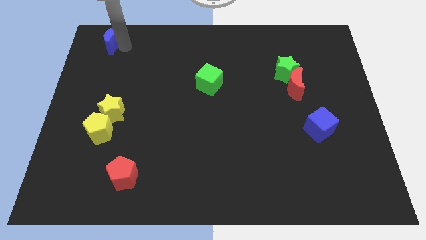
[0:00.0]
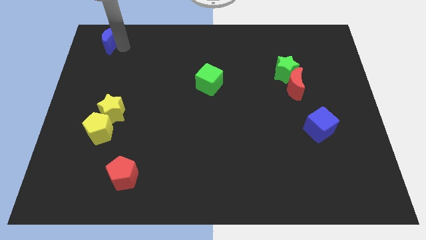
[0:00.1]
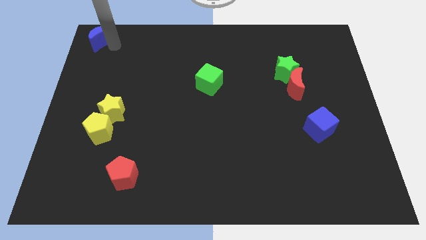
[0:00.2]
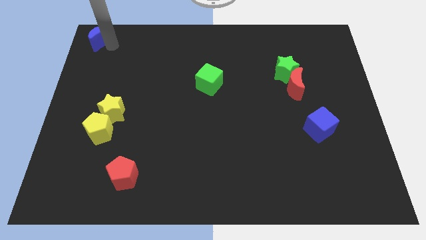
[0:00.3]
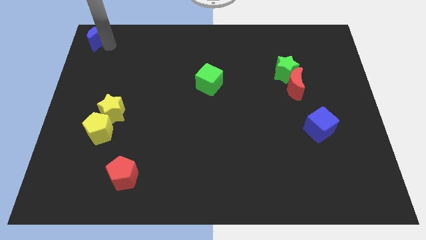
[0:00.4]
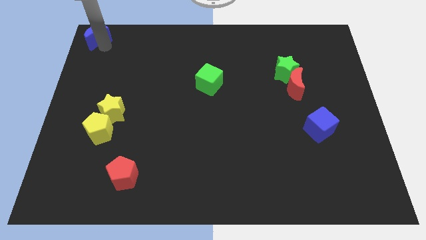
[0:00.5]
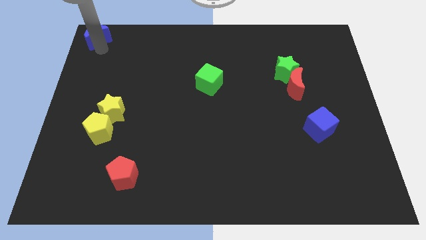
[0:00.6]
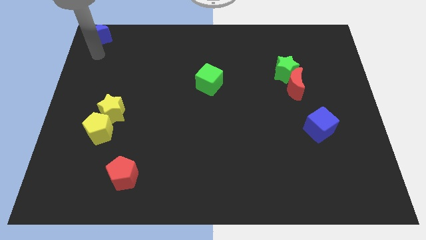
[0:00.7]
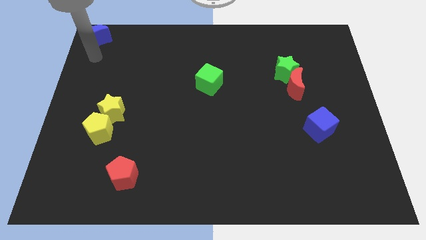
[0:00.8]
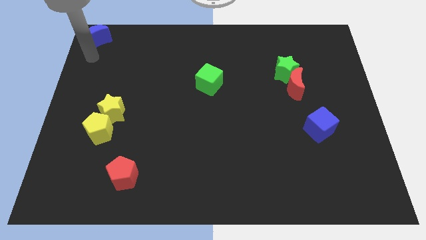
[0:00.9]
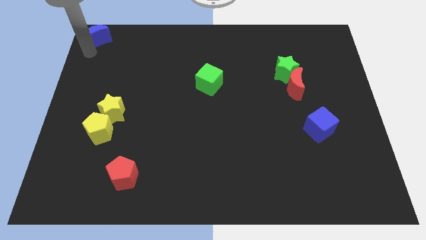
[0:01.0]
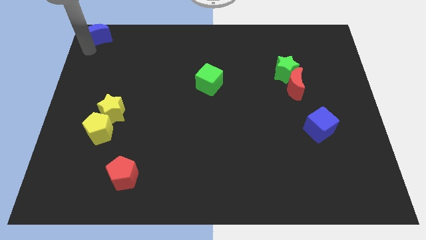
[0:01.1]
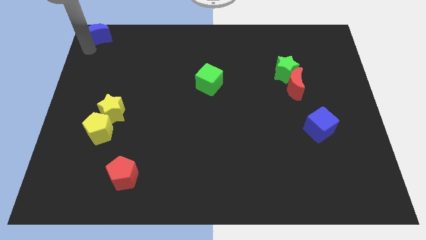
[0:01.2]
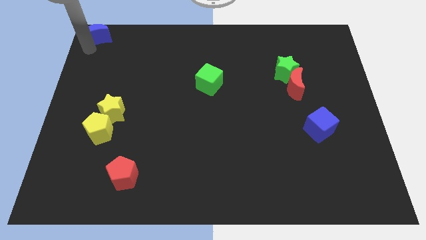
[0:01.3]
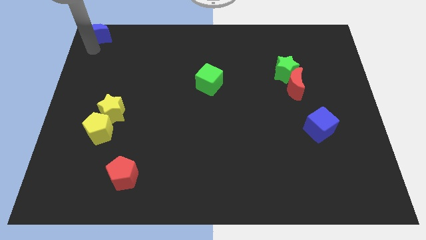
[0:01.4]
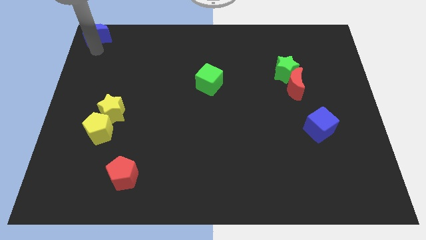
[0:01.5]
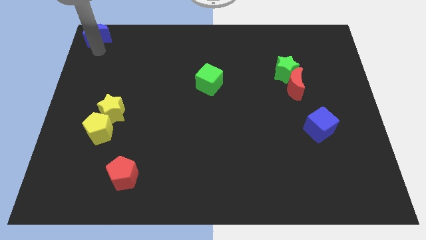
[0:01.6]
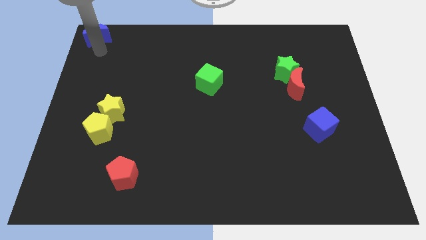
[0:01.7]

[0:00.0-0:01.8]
move the blue crescent to the top left corner of the board

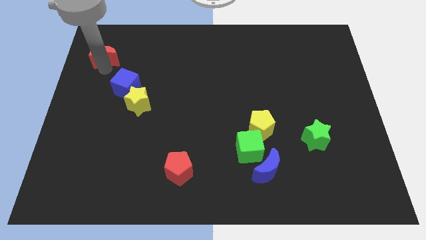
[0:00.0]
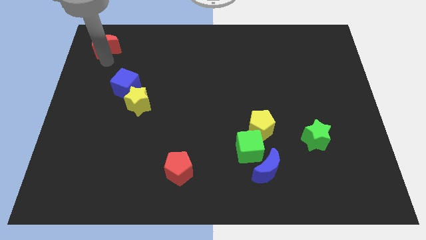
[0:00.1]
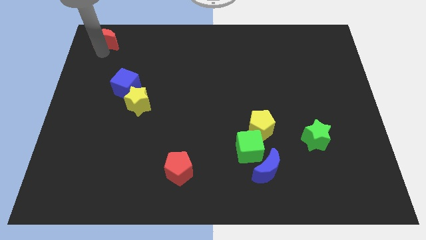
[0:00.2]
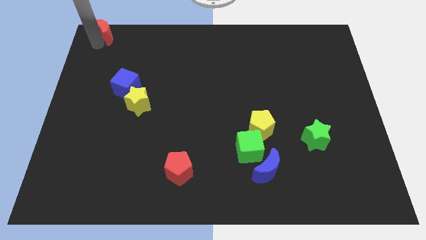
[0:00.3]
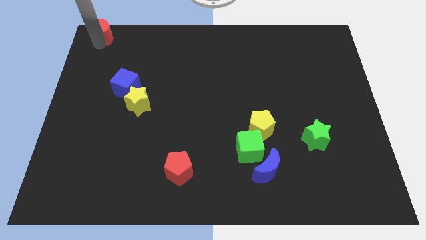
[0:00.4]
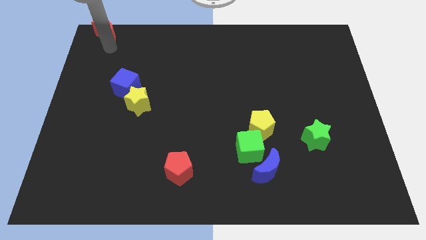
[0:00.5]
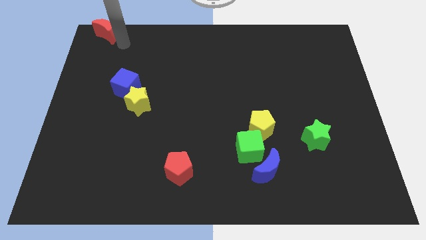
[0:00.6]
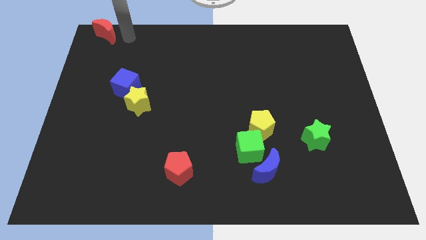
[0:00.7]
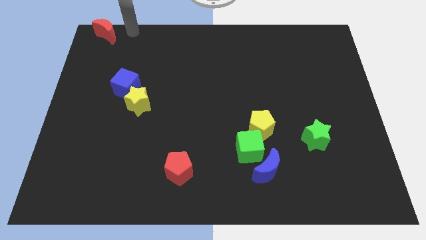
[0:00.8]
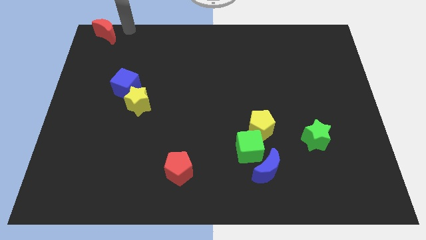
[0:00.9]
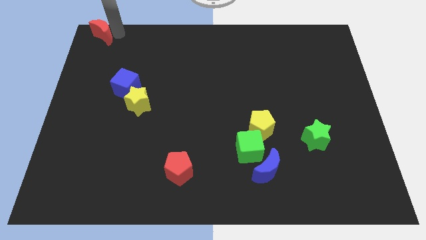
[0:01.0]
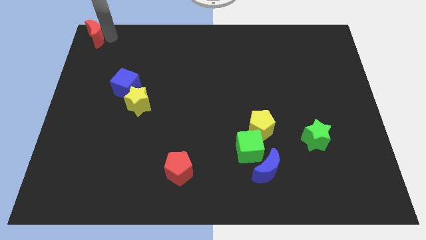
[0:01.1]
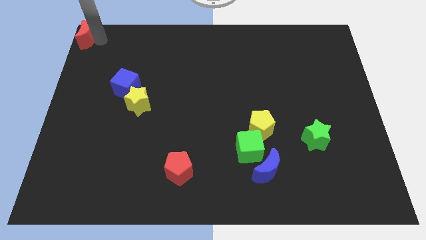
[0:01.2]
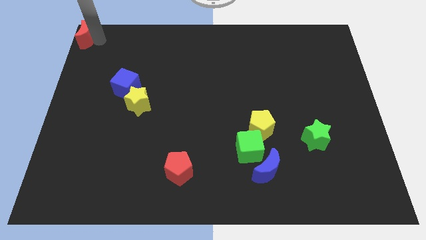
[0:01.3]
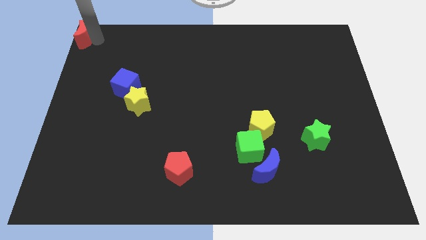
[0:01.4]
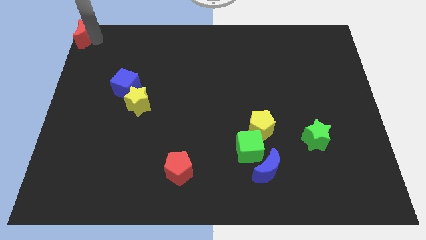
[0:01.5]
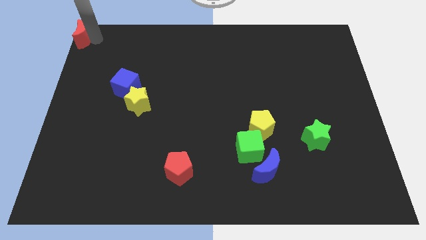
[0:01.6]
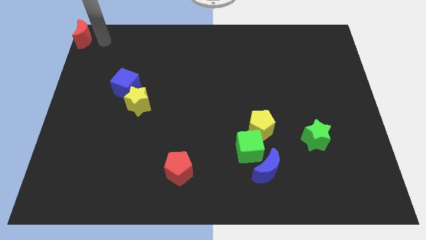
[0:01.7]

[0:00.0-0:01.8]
move the red moon to the top left corner

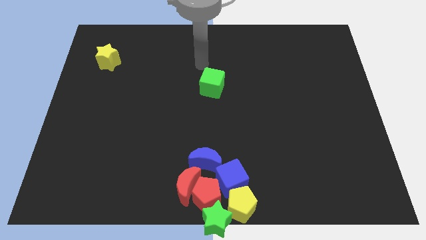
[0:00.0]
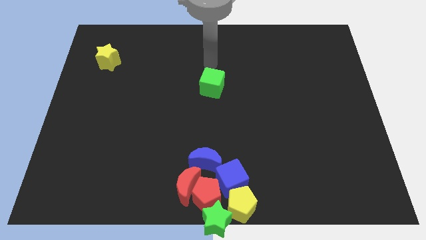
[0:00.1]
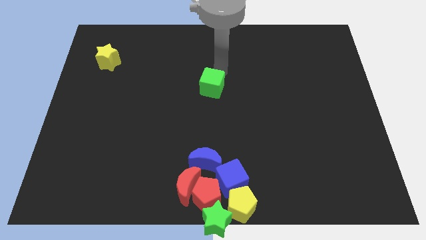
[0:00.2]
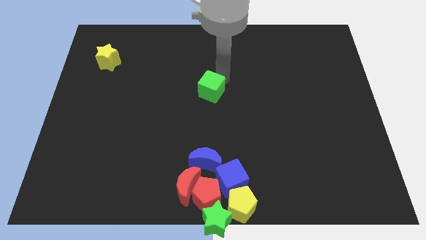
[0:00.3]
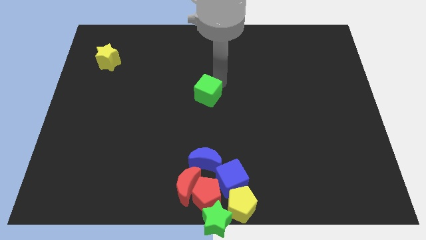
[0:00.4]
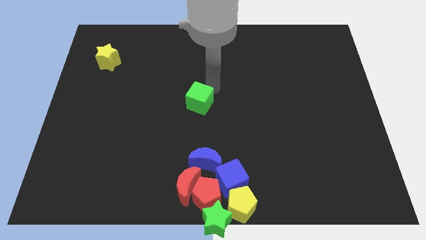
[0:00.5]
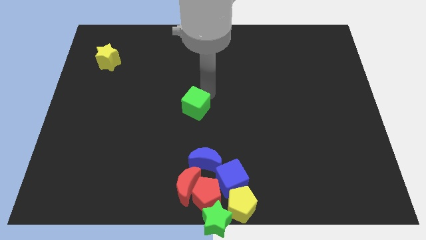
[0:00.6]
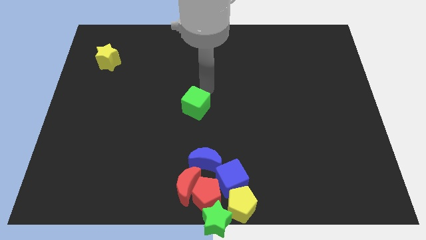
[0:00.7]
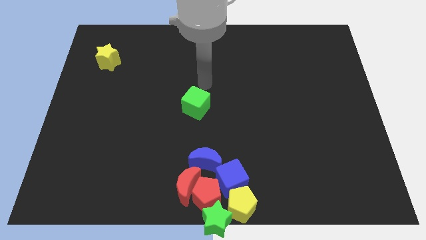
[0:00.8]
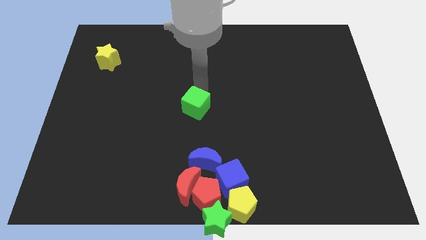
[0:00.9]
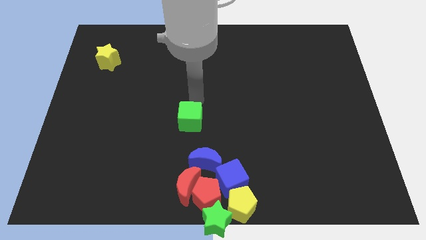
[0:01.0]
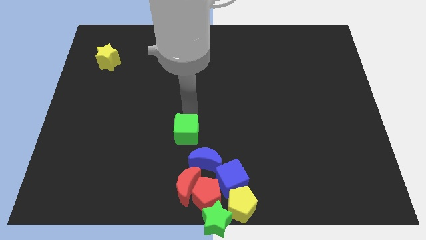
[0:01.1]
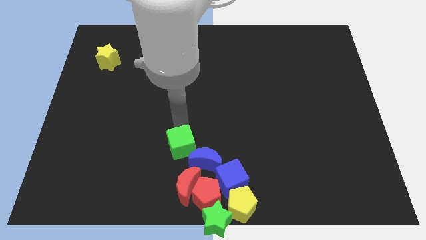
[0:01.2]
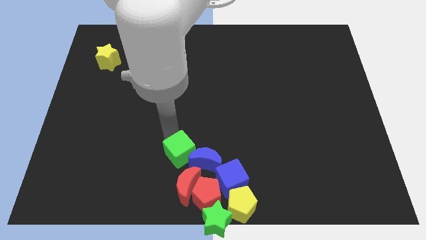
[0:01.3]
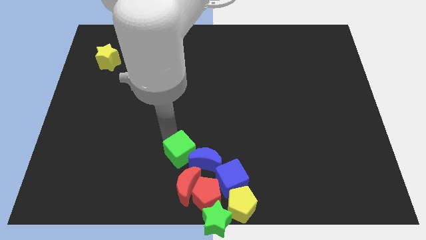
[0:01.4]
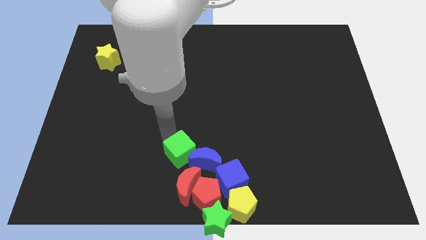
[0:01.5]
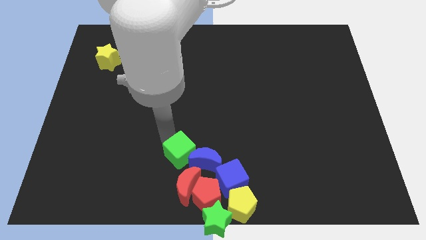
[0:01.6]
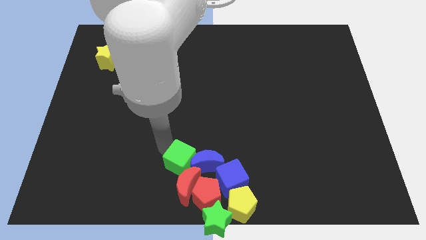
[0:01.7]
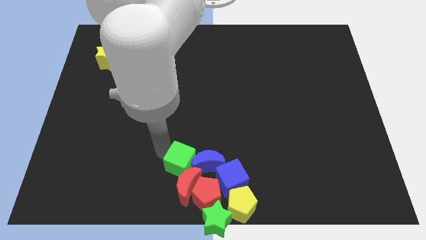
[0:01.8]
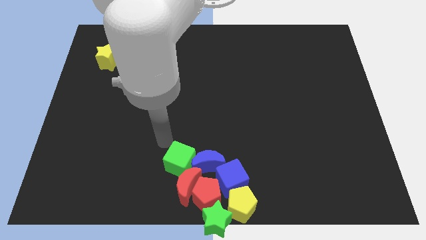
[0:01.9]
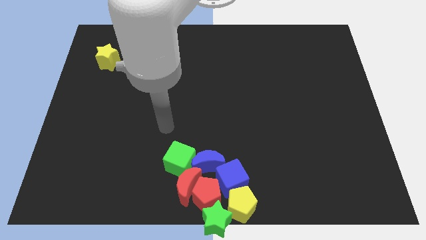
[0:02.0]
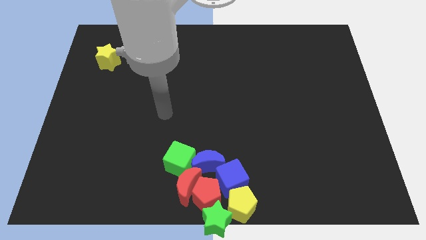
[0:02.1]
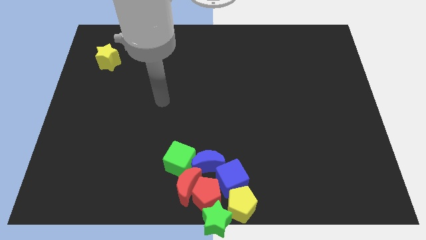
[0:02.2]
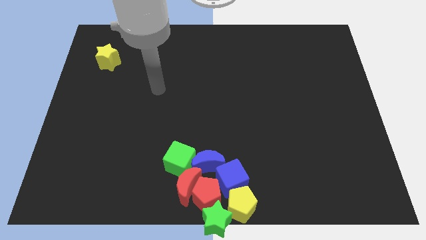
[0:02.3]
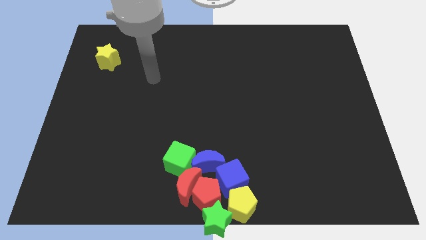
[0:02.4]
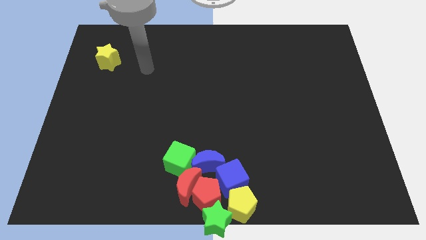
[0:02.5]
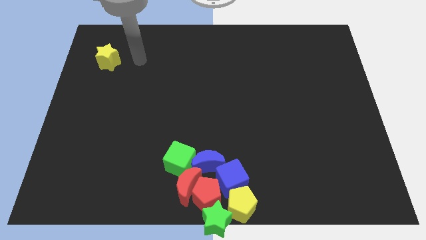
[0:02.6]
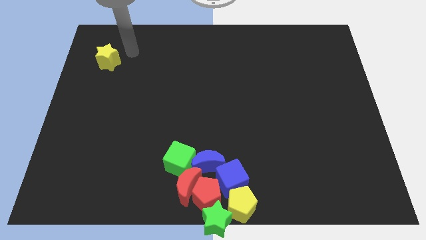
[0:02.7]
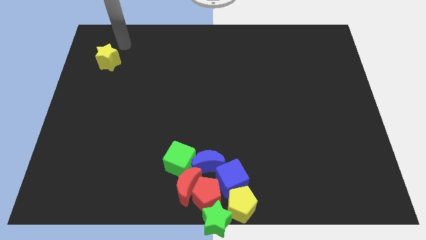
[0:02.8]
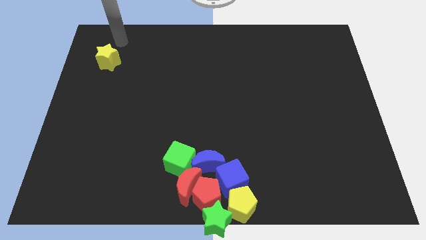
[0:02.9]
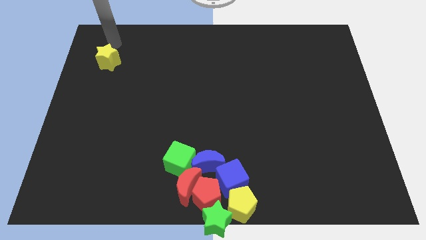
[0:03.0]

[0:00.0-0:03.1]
push the green cube into the group of blocks

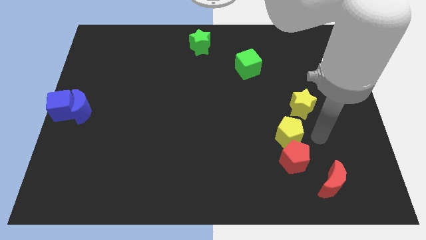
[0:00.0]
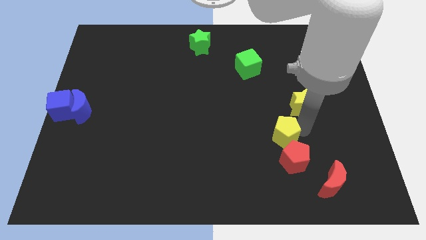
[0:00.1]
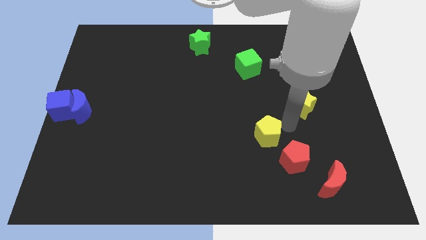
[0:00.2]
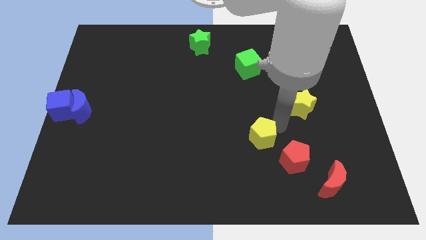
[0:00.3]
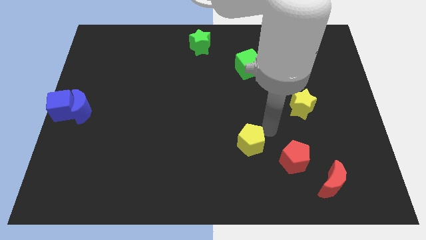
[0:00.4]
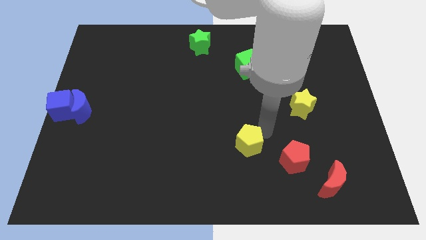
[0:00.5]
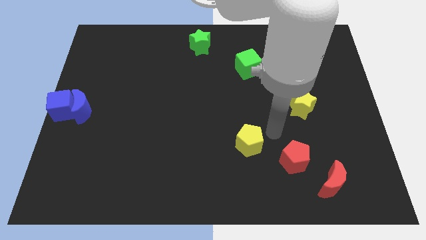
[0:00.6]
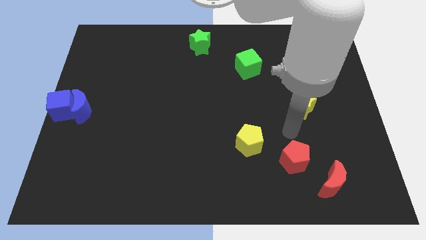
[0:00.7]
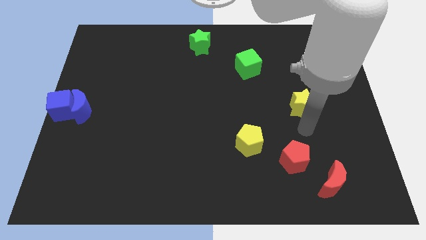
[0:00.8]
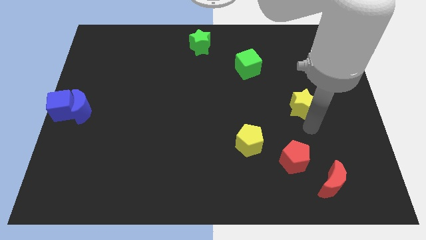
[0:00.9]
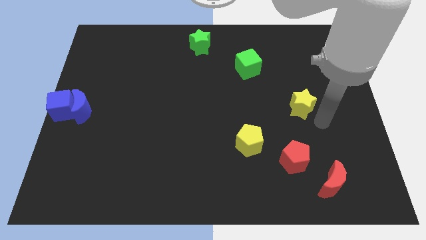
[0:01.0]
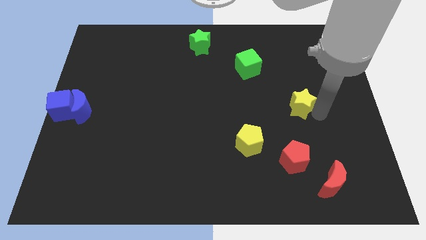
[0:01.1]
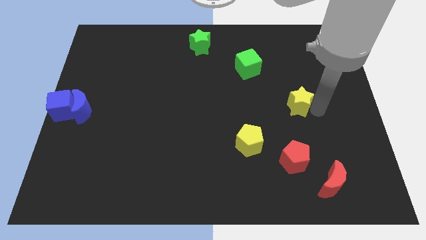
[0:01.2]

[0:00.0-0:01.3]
move the yellow pentagon away from the red pentagon

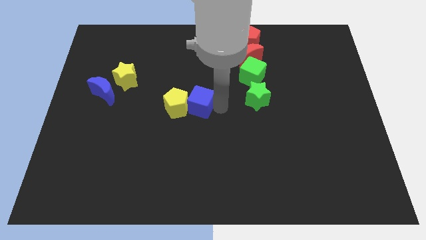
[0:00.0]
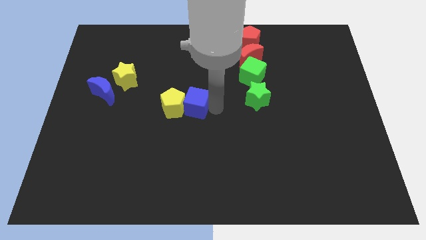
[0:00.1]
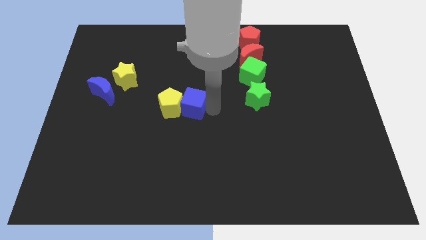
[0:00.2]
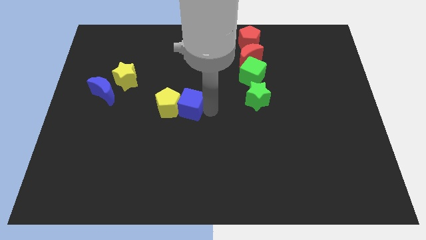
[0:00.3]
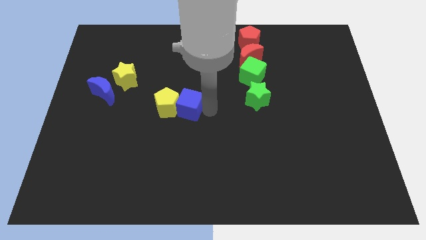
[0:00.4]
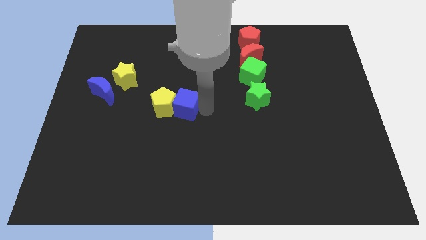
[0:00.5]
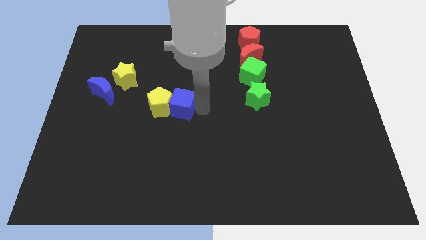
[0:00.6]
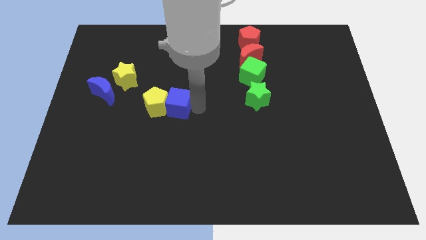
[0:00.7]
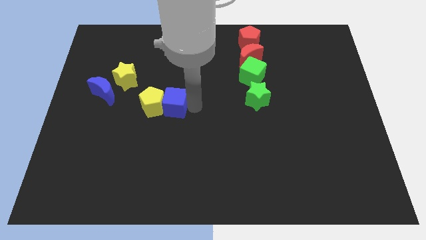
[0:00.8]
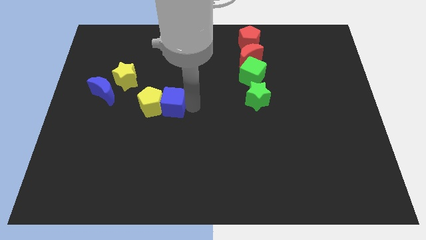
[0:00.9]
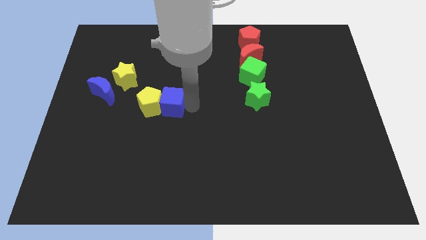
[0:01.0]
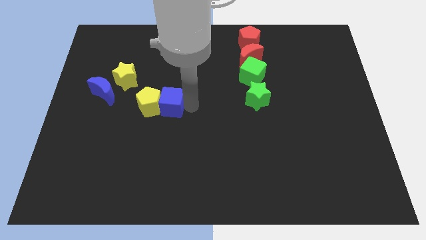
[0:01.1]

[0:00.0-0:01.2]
push the yellow pentagon with the blue cube
